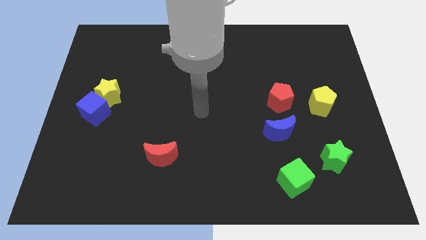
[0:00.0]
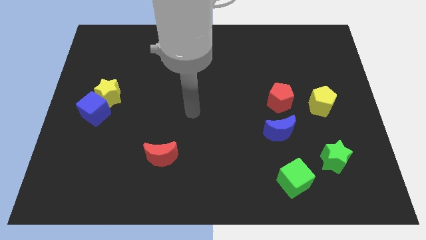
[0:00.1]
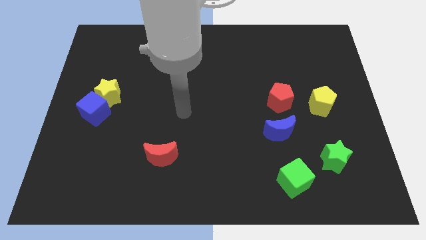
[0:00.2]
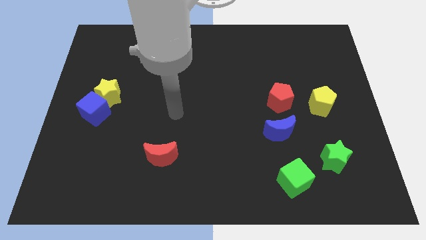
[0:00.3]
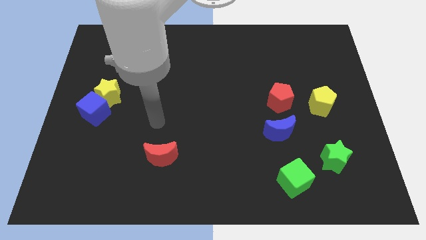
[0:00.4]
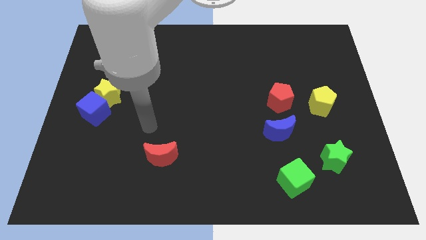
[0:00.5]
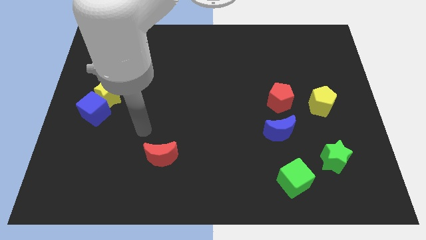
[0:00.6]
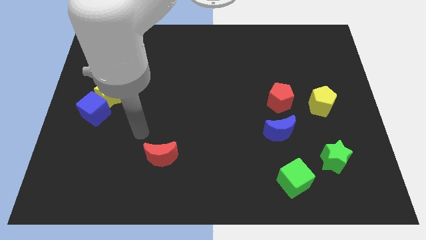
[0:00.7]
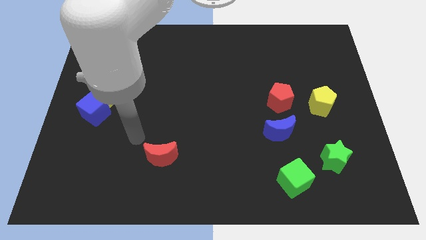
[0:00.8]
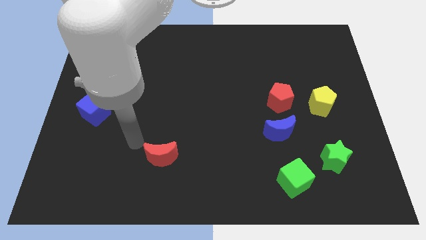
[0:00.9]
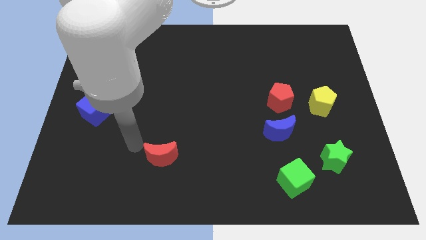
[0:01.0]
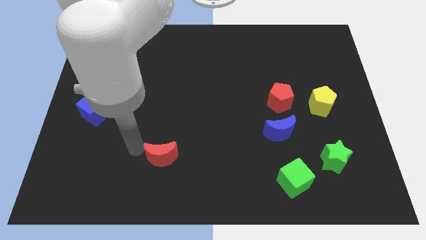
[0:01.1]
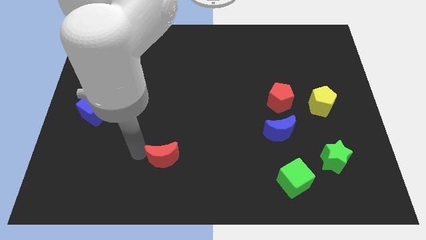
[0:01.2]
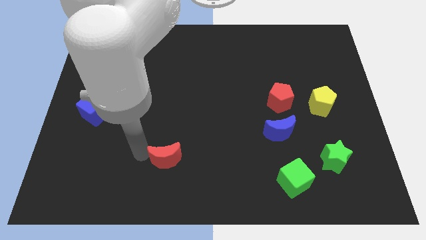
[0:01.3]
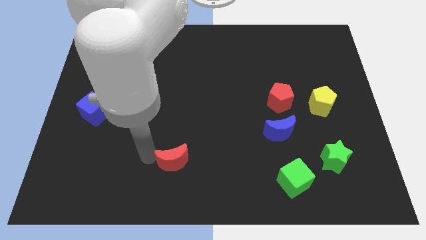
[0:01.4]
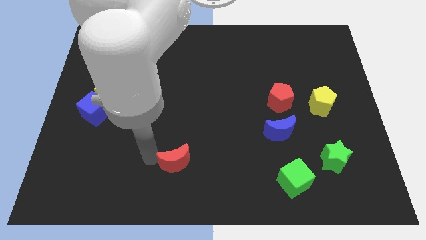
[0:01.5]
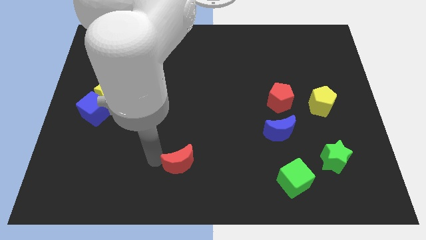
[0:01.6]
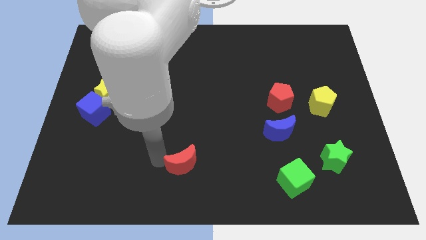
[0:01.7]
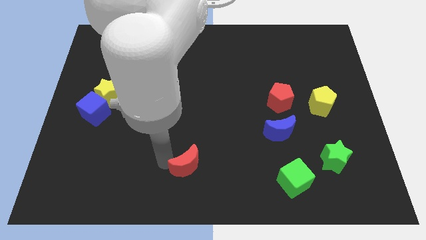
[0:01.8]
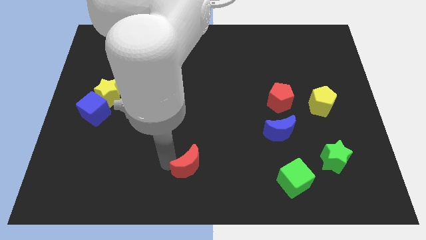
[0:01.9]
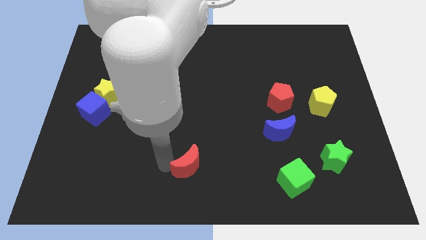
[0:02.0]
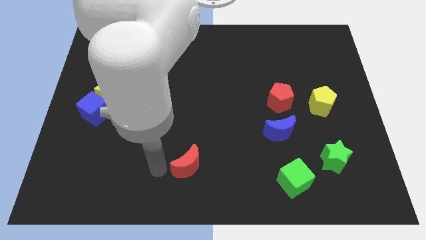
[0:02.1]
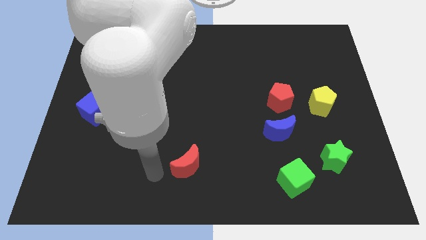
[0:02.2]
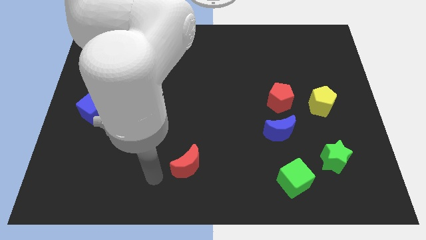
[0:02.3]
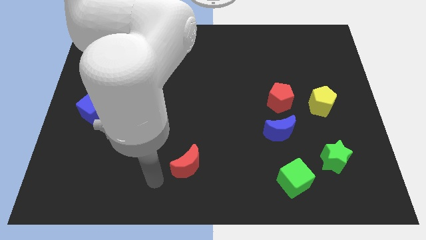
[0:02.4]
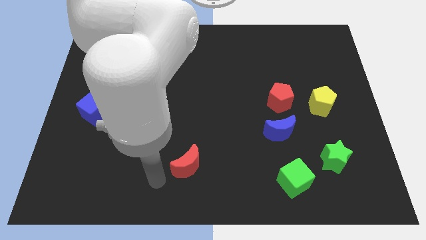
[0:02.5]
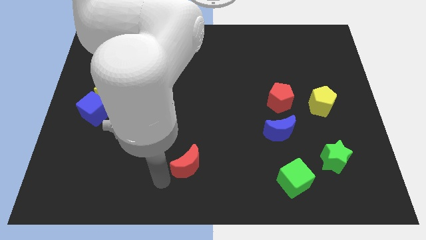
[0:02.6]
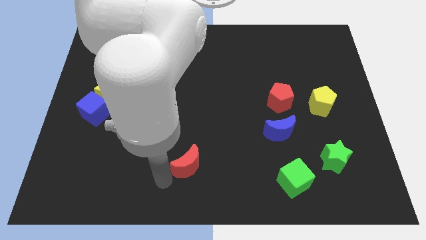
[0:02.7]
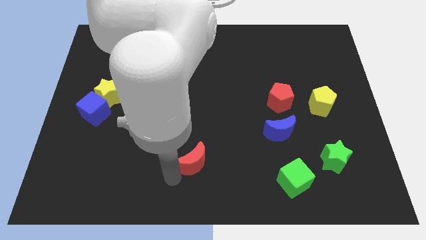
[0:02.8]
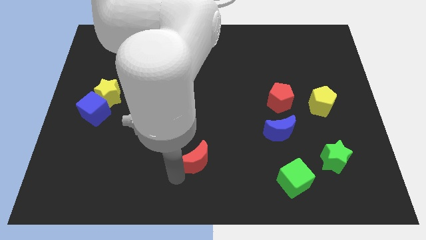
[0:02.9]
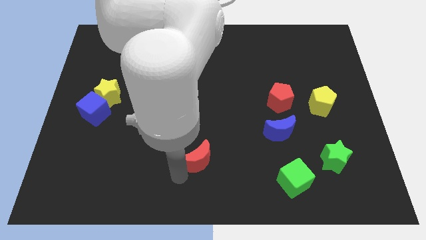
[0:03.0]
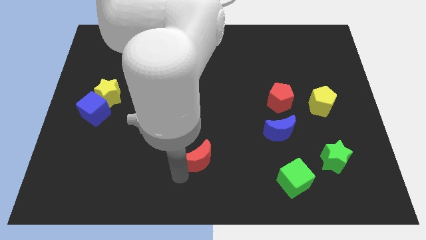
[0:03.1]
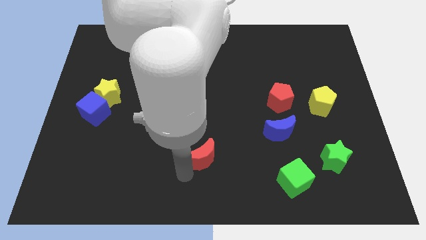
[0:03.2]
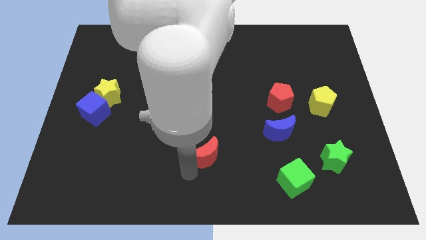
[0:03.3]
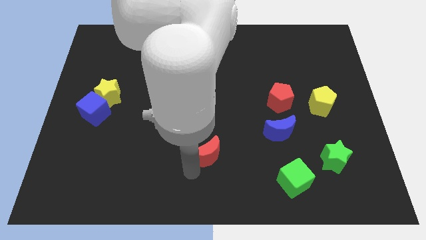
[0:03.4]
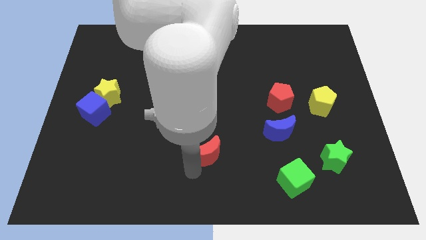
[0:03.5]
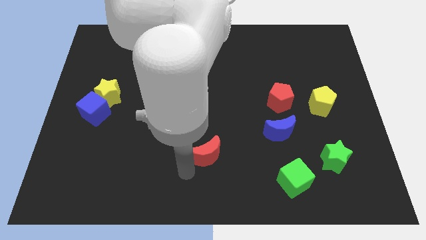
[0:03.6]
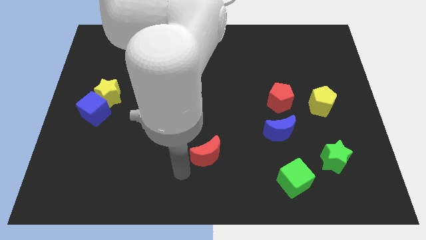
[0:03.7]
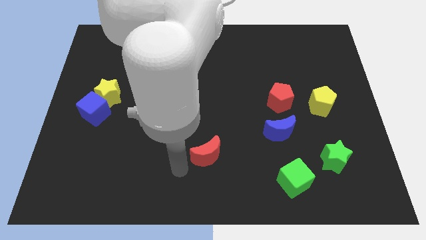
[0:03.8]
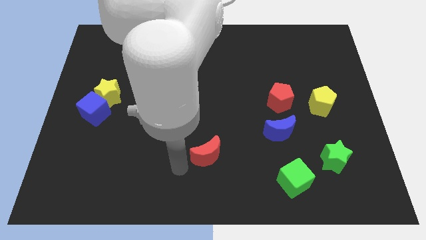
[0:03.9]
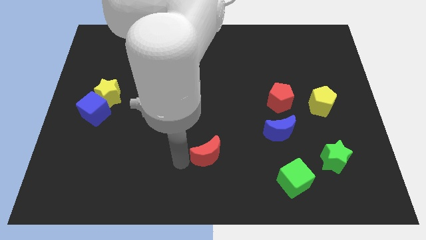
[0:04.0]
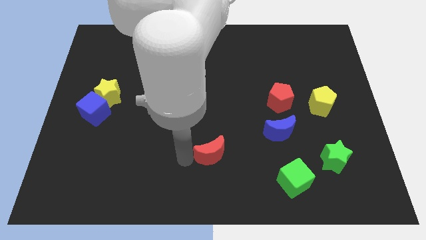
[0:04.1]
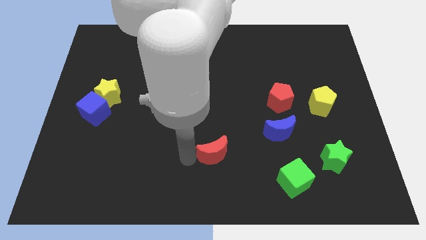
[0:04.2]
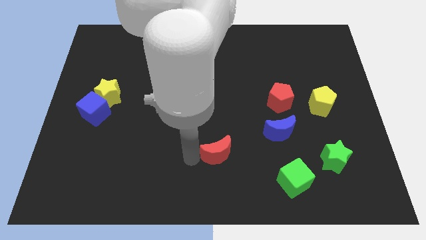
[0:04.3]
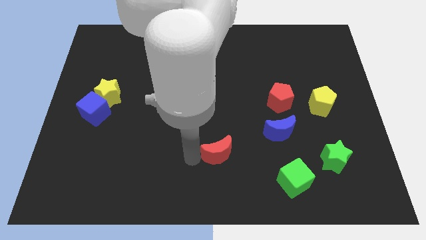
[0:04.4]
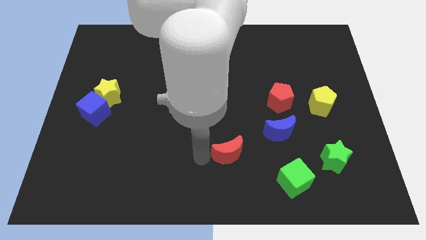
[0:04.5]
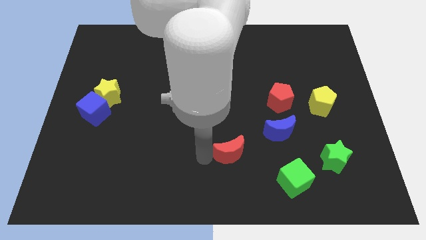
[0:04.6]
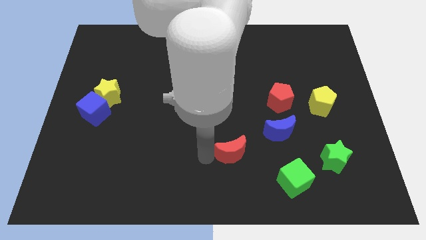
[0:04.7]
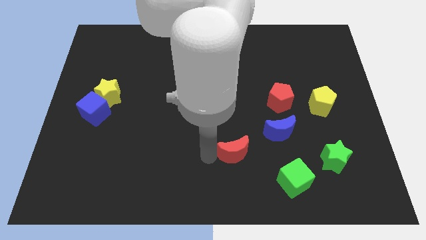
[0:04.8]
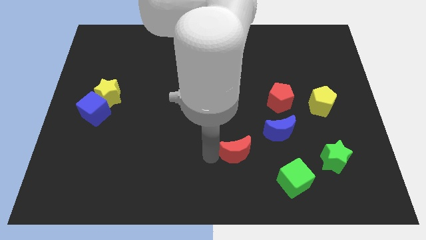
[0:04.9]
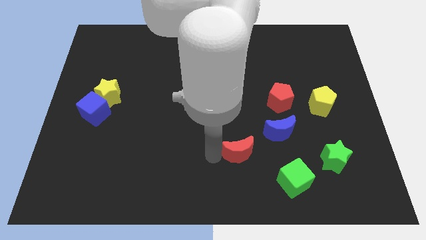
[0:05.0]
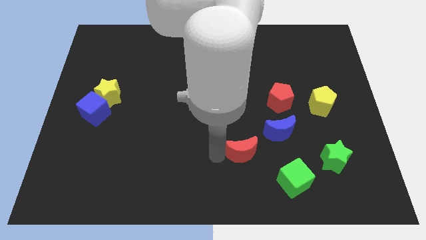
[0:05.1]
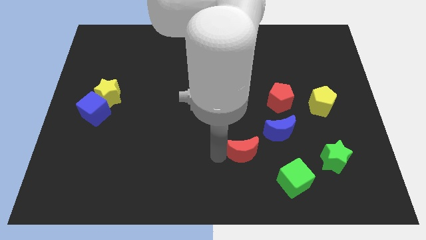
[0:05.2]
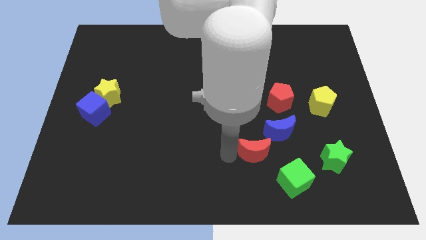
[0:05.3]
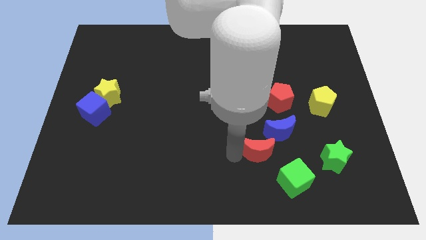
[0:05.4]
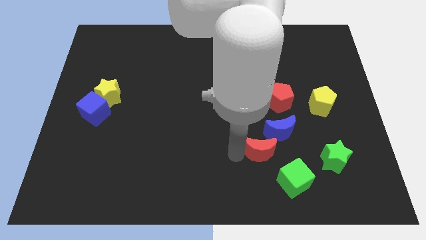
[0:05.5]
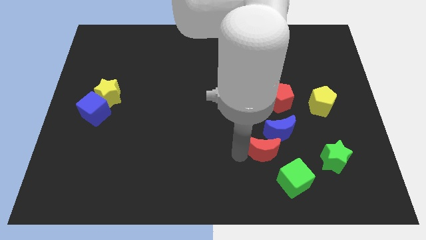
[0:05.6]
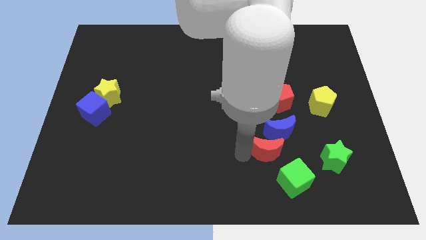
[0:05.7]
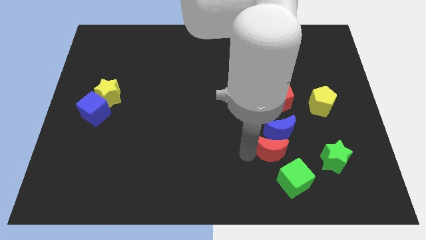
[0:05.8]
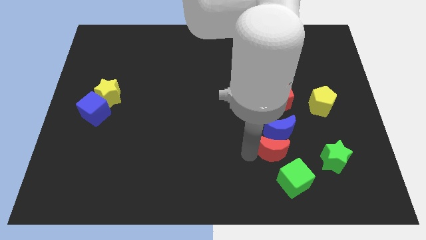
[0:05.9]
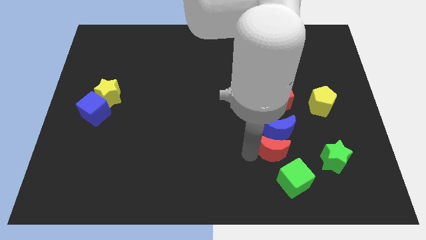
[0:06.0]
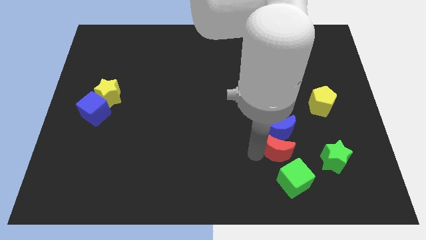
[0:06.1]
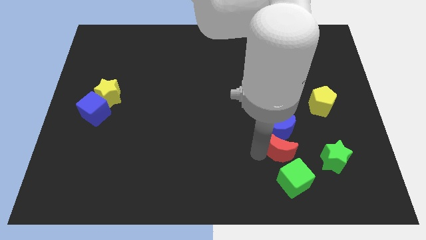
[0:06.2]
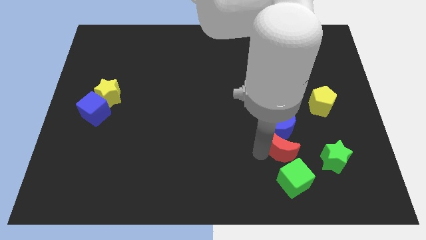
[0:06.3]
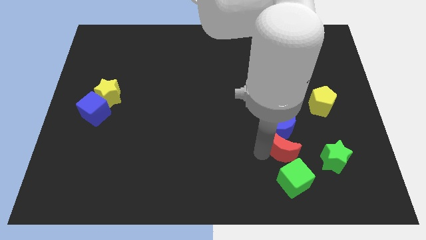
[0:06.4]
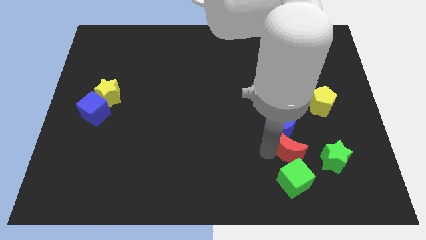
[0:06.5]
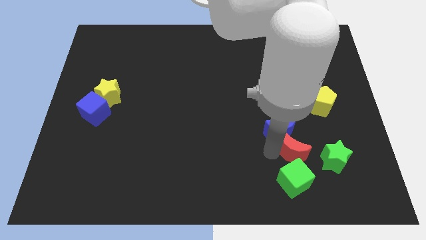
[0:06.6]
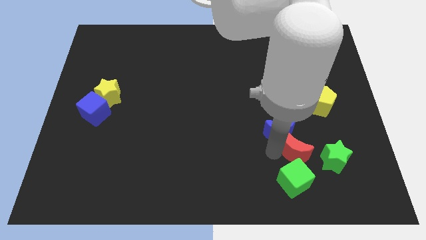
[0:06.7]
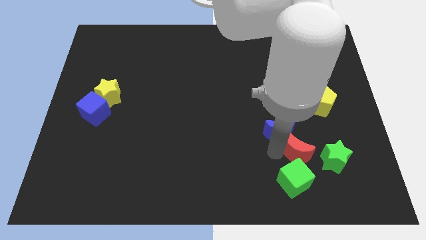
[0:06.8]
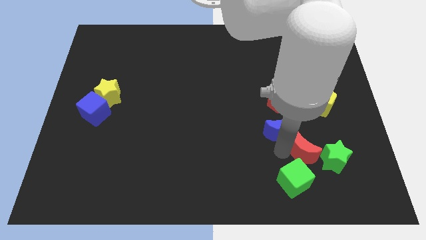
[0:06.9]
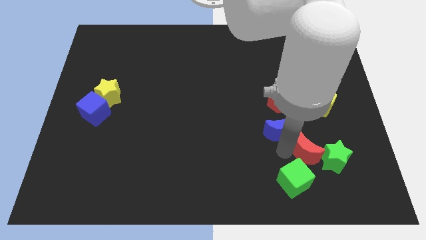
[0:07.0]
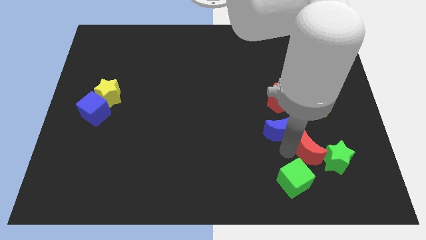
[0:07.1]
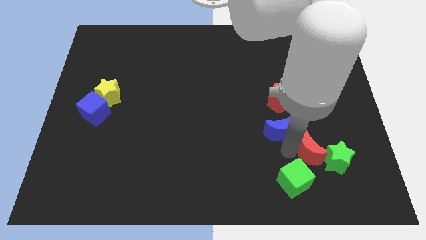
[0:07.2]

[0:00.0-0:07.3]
move the red moon to the green star

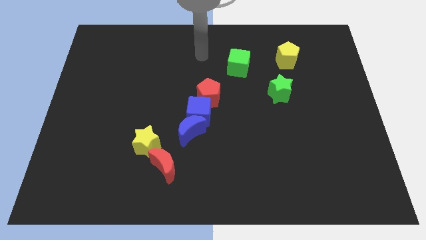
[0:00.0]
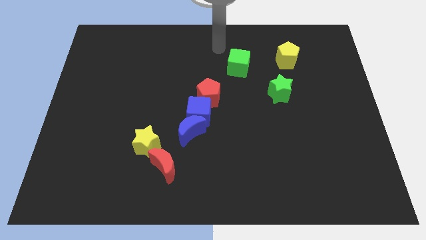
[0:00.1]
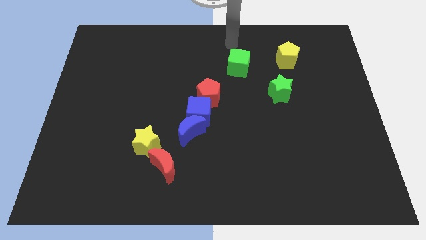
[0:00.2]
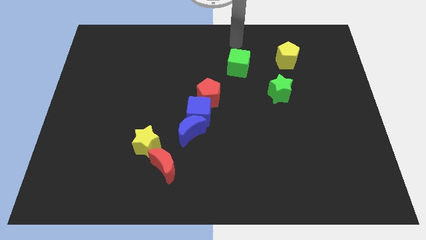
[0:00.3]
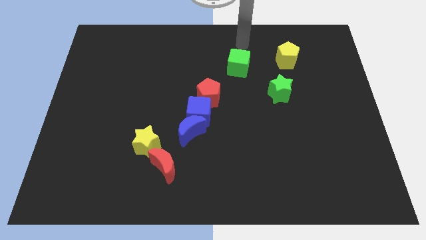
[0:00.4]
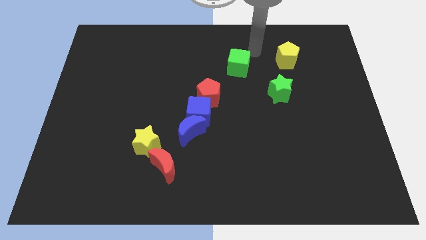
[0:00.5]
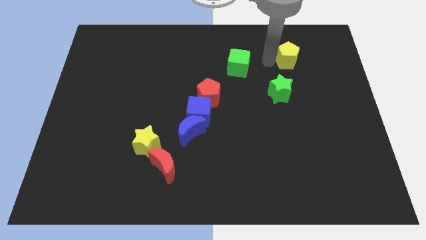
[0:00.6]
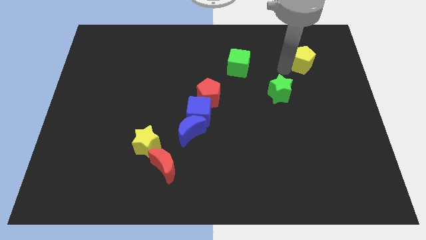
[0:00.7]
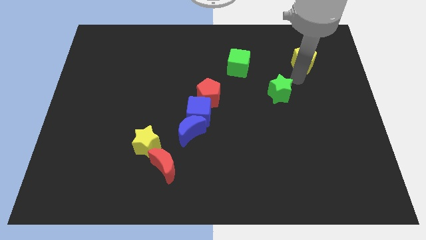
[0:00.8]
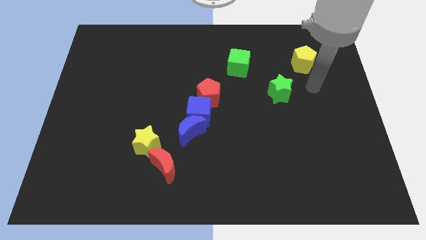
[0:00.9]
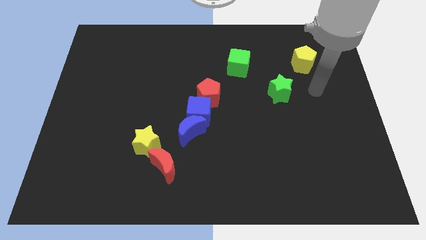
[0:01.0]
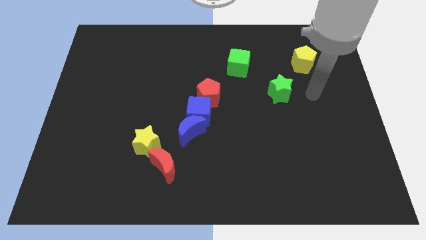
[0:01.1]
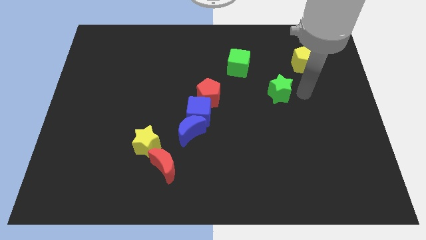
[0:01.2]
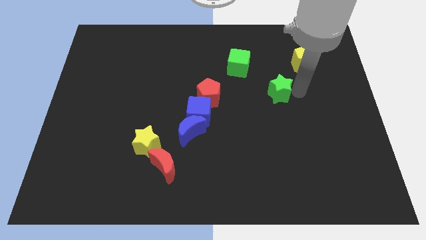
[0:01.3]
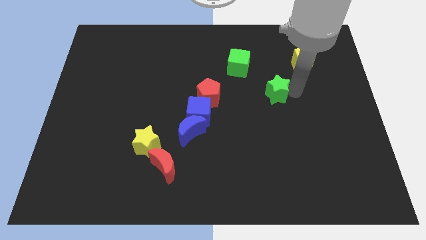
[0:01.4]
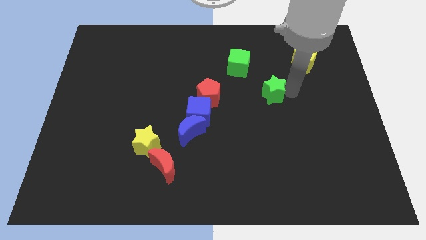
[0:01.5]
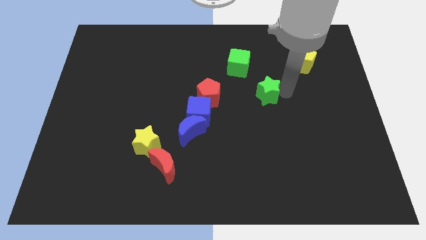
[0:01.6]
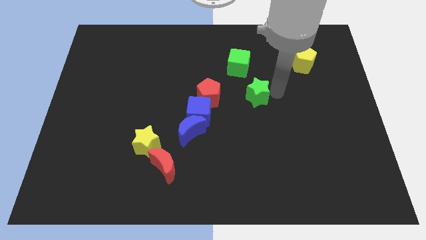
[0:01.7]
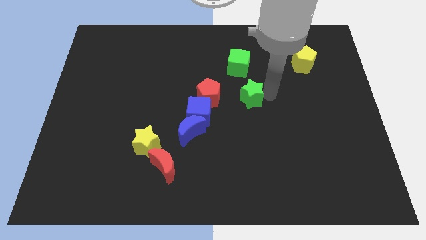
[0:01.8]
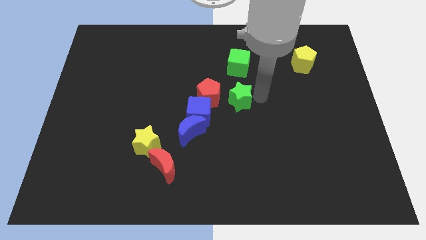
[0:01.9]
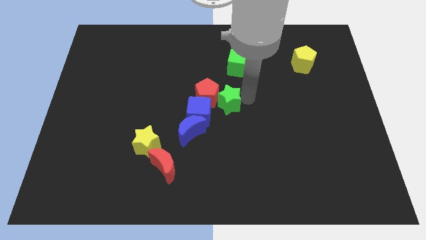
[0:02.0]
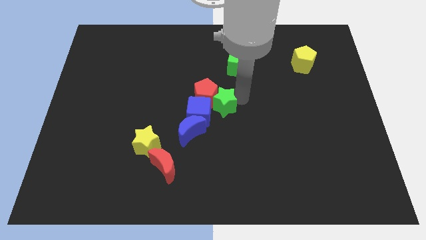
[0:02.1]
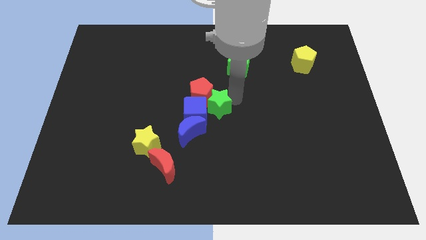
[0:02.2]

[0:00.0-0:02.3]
push the green star close to the red pentagon
